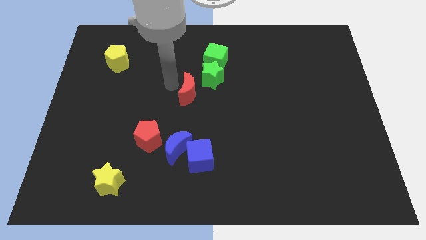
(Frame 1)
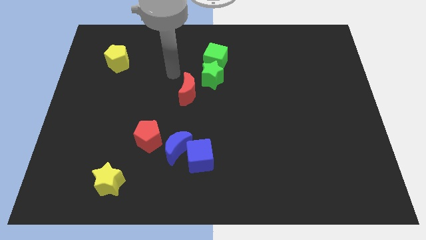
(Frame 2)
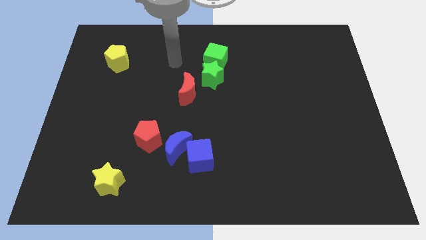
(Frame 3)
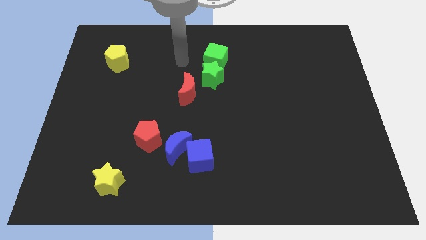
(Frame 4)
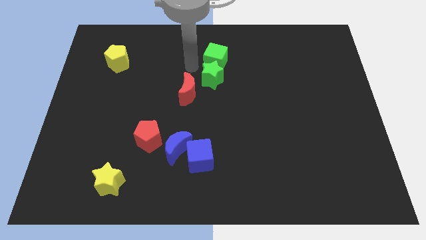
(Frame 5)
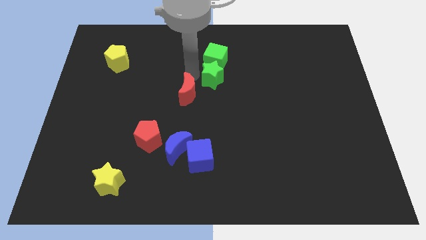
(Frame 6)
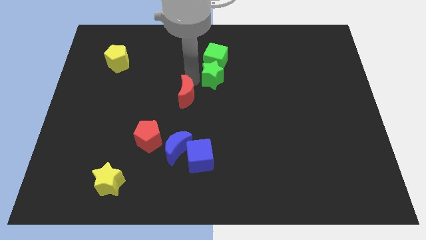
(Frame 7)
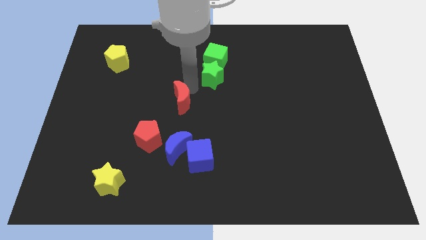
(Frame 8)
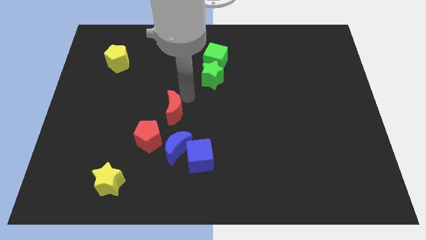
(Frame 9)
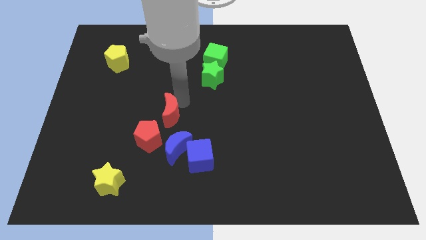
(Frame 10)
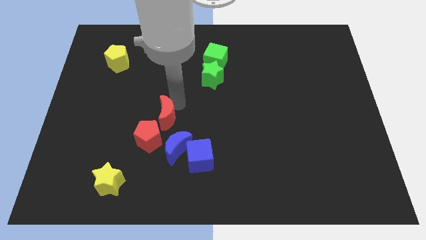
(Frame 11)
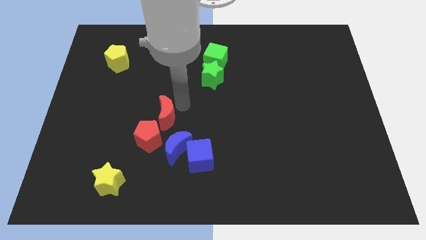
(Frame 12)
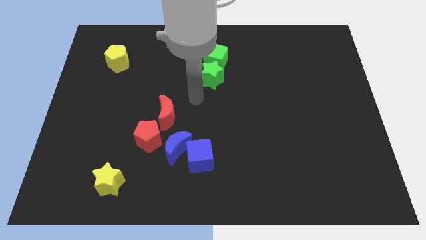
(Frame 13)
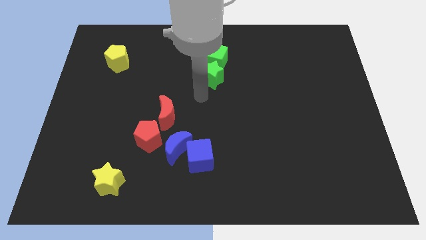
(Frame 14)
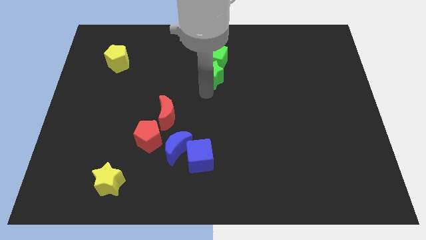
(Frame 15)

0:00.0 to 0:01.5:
place the red crescent towards the top right side of the red pentagon

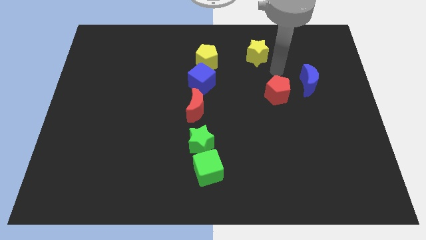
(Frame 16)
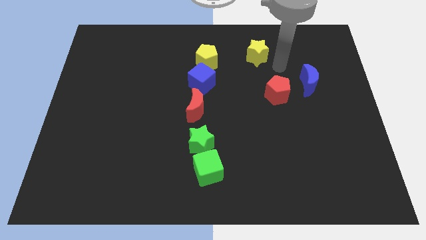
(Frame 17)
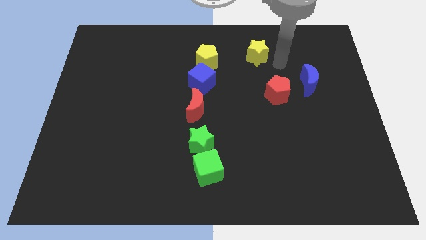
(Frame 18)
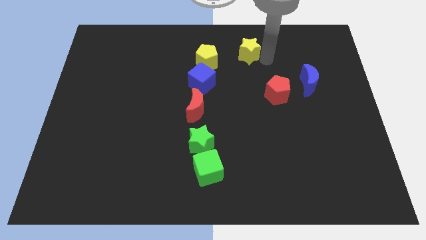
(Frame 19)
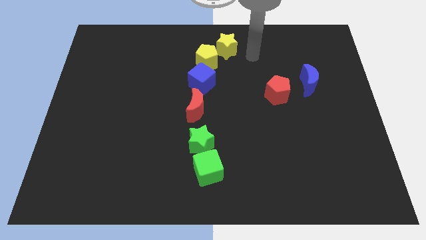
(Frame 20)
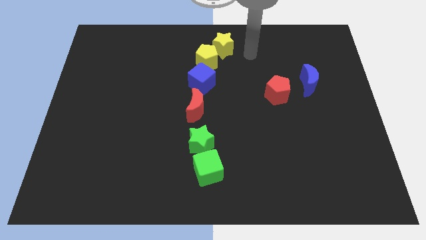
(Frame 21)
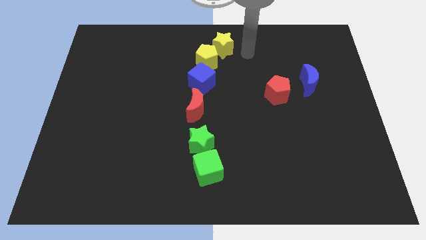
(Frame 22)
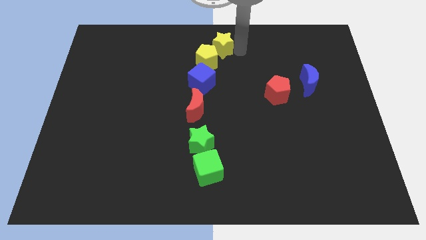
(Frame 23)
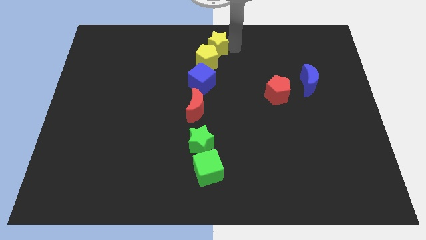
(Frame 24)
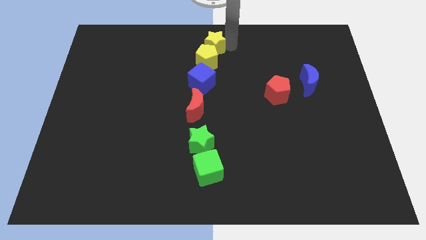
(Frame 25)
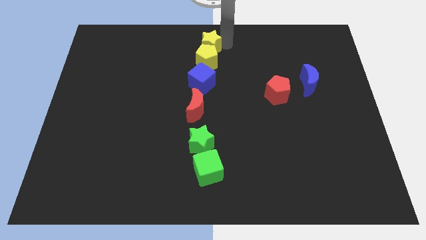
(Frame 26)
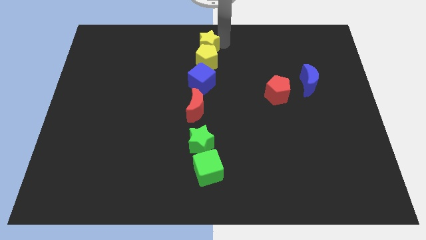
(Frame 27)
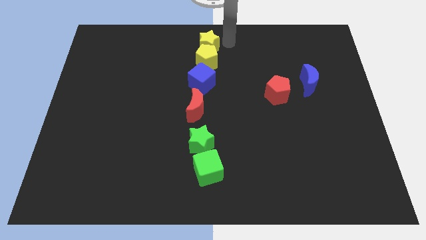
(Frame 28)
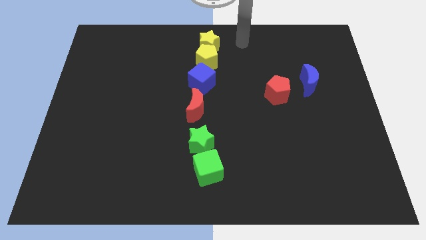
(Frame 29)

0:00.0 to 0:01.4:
put the yellow star at the top side of the yellow pentagon

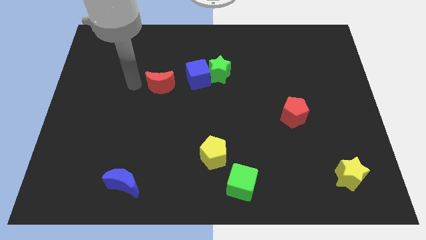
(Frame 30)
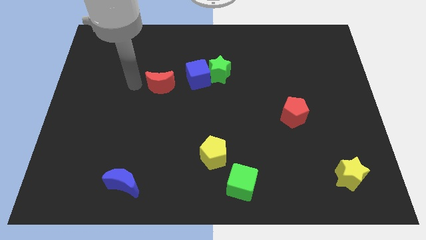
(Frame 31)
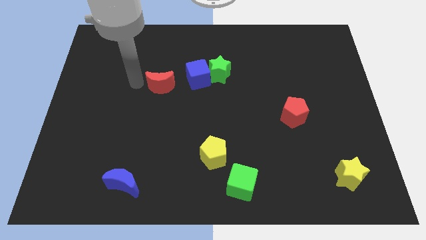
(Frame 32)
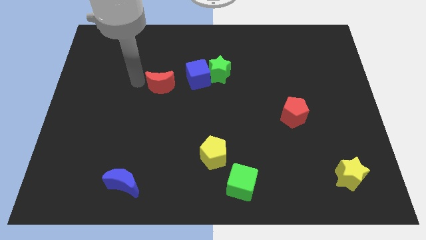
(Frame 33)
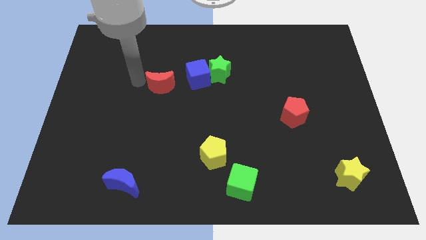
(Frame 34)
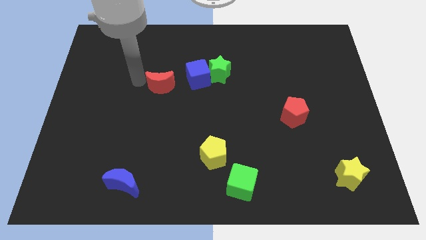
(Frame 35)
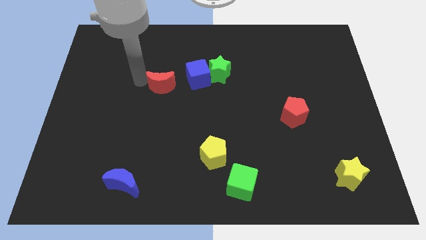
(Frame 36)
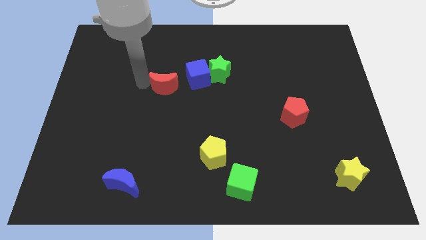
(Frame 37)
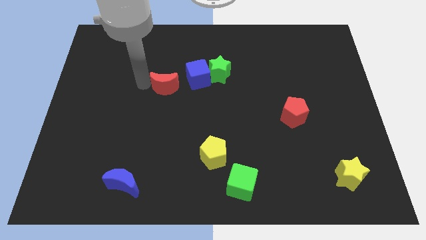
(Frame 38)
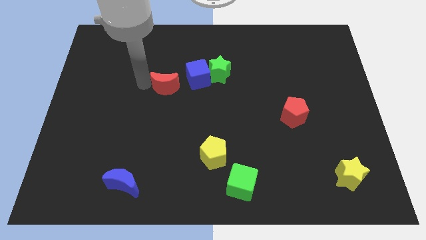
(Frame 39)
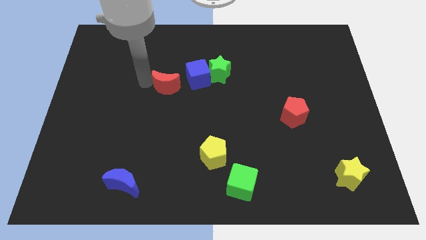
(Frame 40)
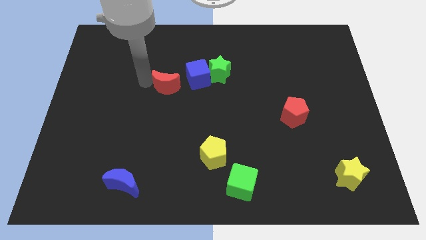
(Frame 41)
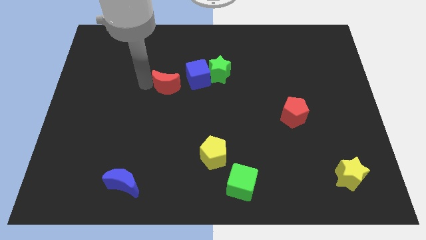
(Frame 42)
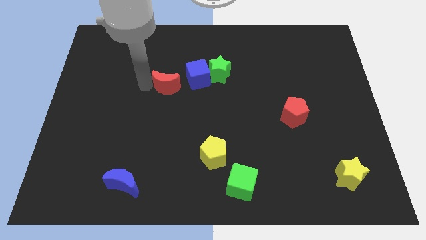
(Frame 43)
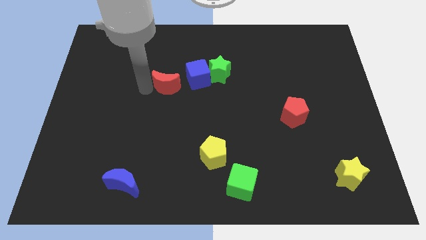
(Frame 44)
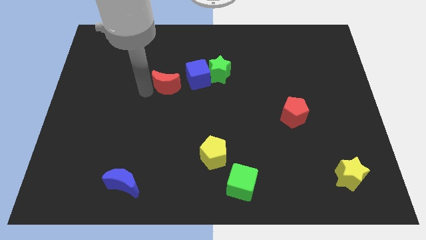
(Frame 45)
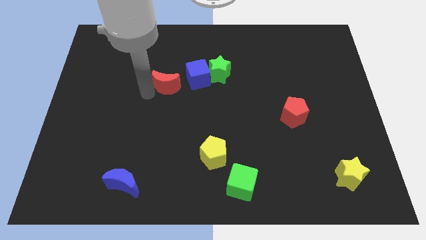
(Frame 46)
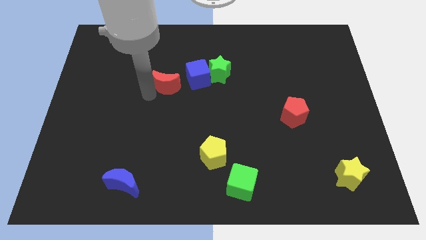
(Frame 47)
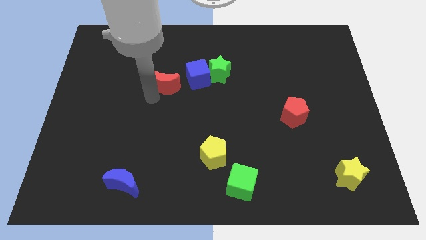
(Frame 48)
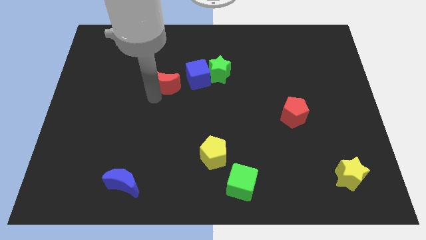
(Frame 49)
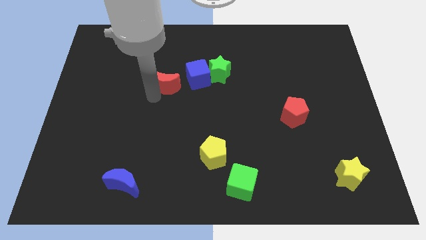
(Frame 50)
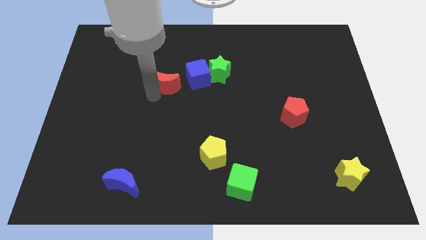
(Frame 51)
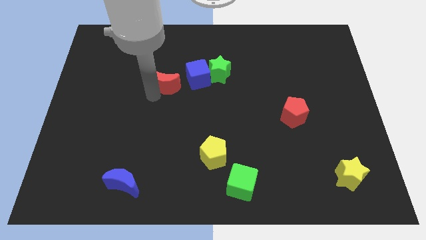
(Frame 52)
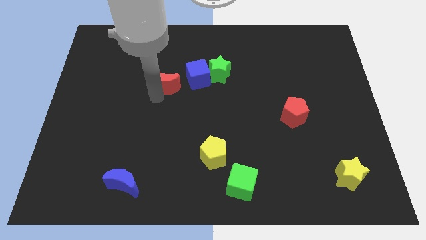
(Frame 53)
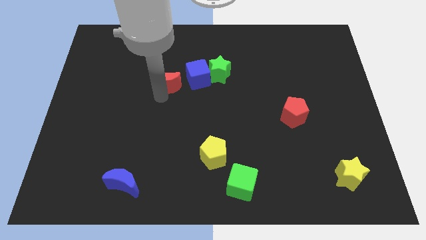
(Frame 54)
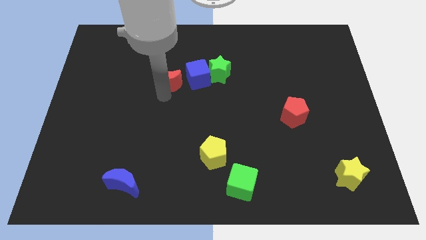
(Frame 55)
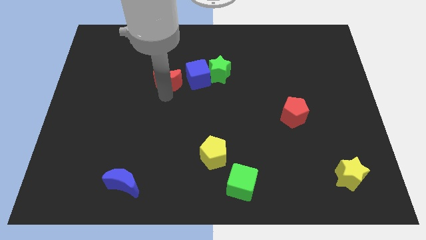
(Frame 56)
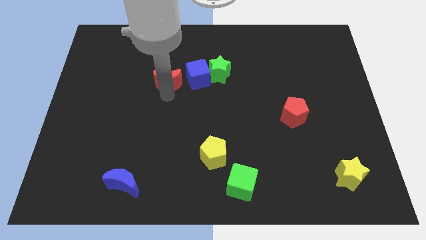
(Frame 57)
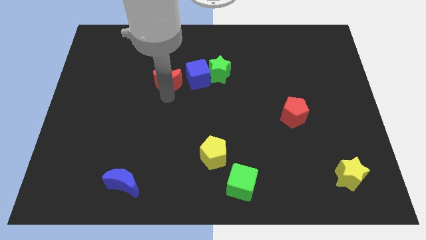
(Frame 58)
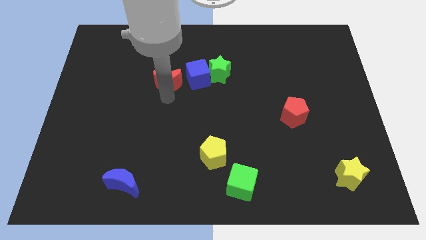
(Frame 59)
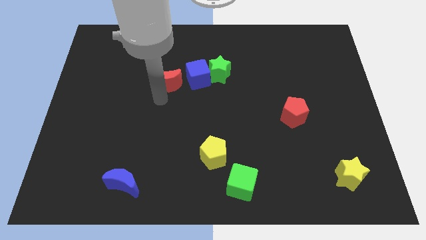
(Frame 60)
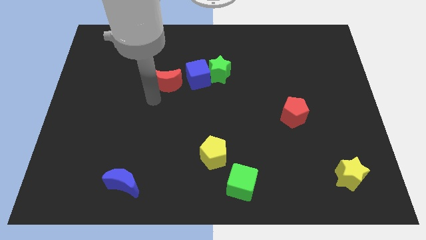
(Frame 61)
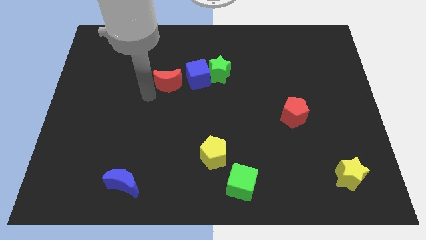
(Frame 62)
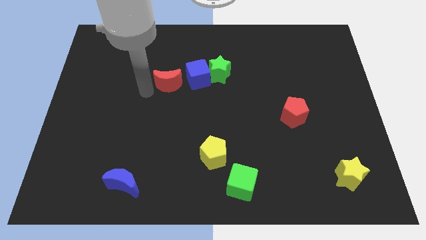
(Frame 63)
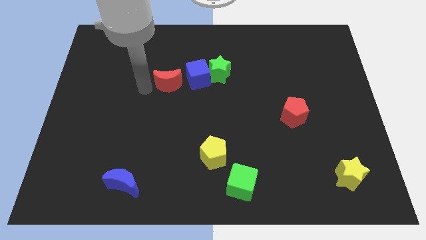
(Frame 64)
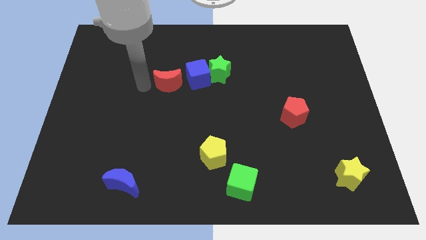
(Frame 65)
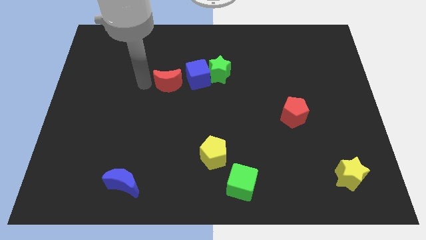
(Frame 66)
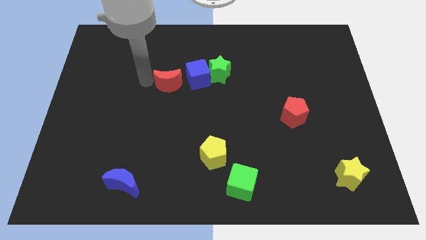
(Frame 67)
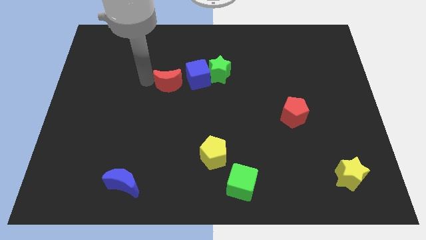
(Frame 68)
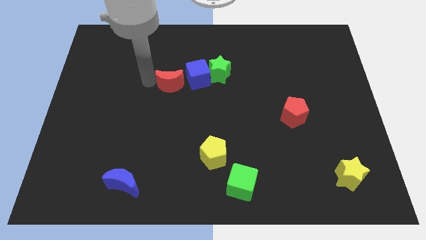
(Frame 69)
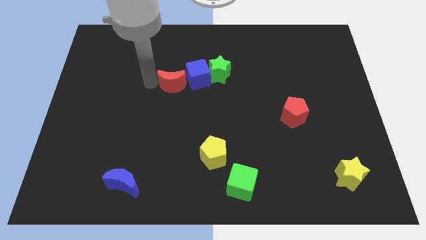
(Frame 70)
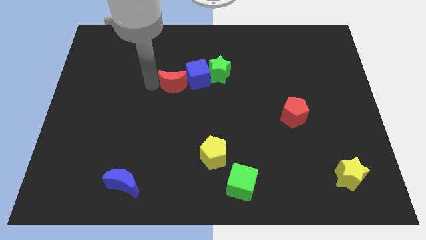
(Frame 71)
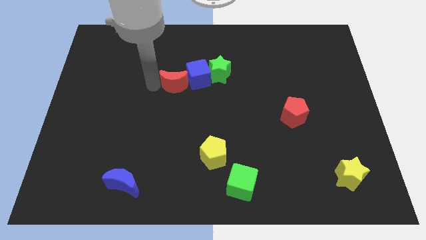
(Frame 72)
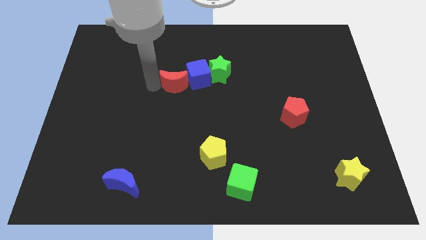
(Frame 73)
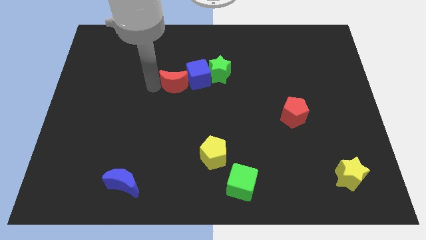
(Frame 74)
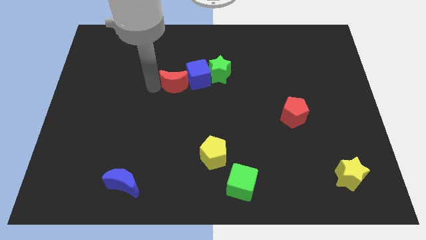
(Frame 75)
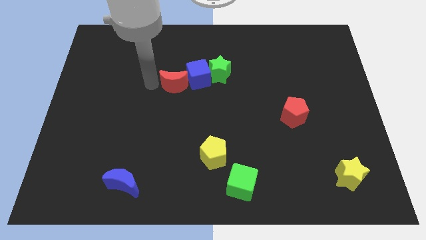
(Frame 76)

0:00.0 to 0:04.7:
move the red crescent to the left of blue cube

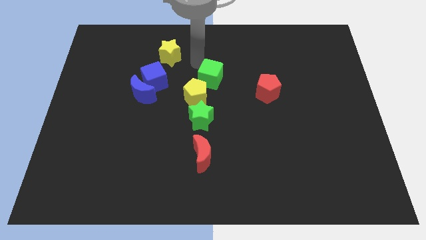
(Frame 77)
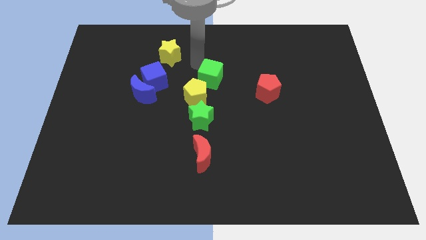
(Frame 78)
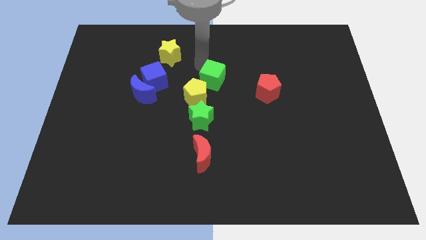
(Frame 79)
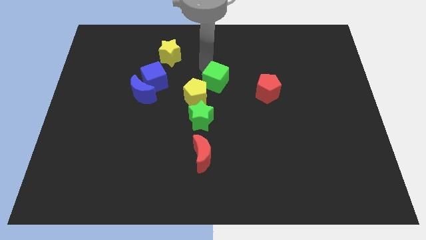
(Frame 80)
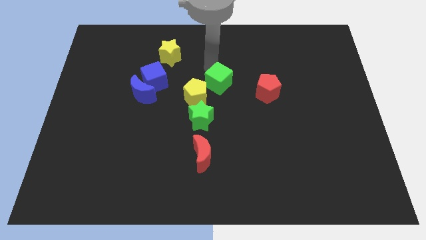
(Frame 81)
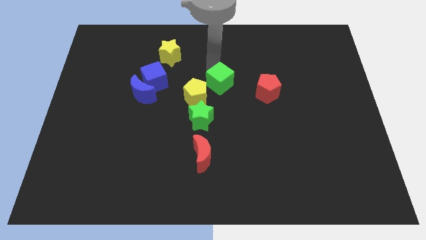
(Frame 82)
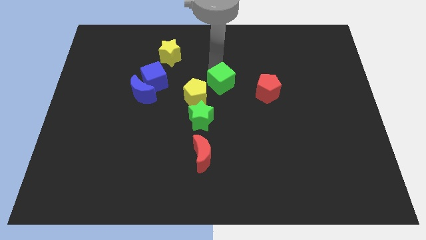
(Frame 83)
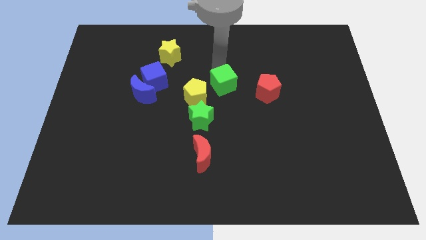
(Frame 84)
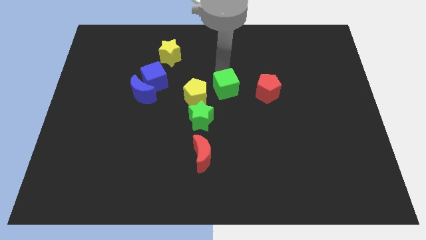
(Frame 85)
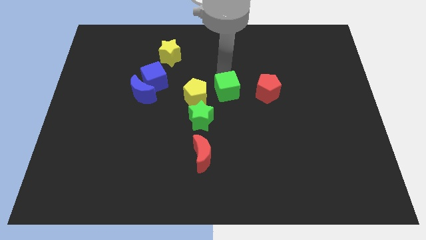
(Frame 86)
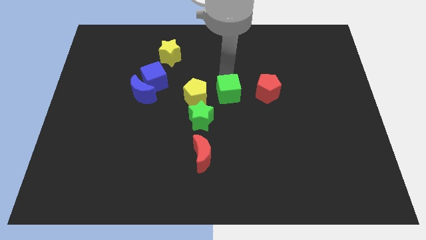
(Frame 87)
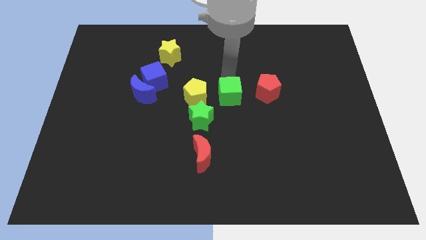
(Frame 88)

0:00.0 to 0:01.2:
place the green cube in between the yellow pentagon and red pentagon

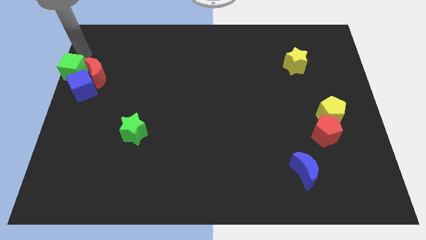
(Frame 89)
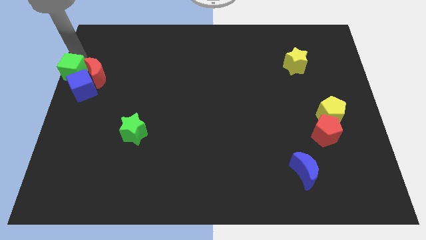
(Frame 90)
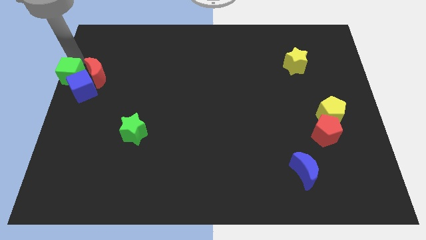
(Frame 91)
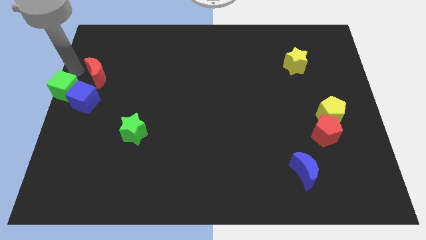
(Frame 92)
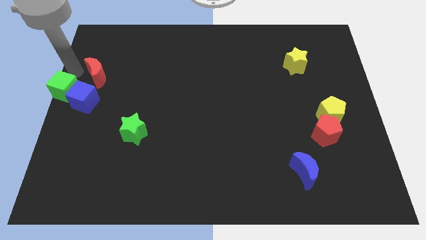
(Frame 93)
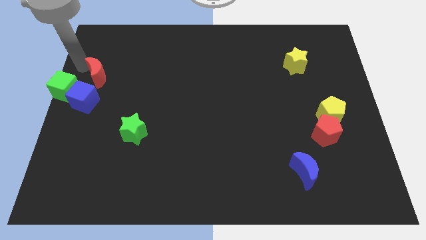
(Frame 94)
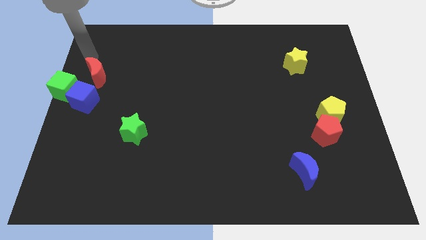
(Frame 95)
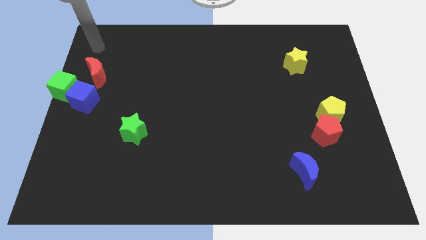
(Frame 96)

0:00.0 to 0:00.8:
push the green cube slightly down
